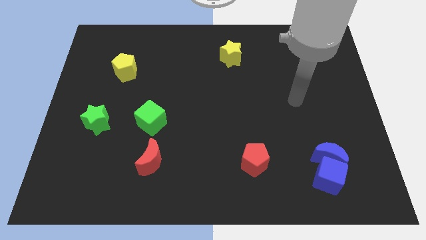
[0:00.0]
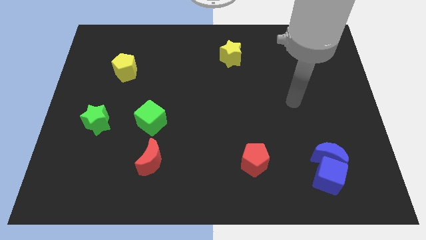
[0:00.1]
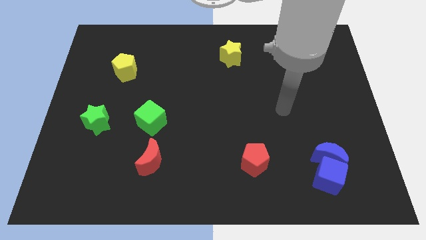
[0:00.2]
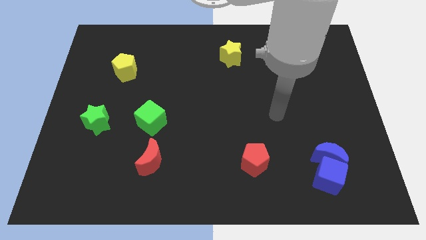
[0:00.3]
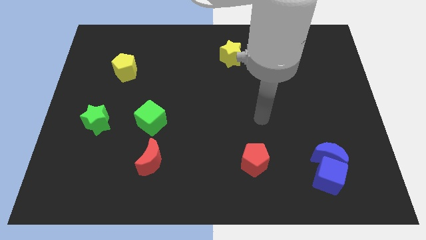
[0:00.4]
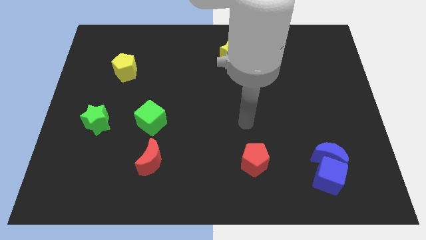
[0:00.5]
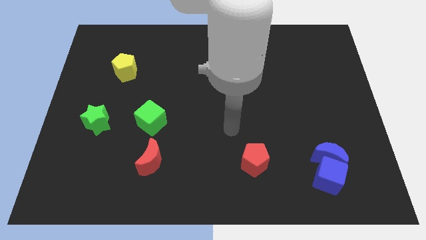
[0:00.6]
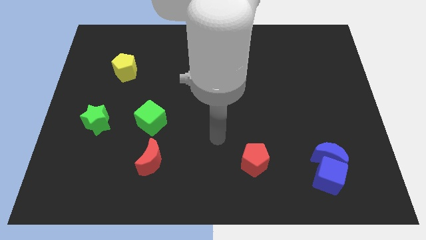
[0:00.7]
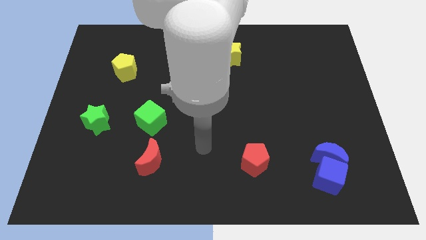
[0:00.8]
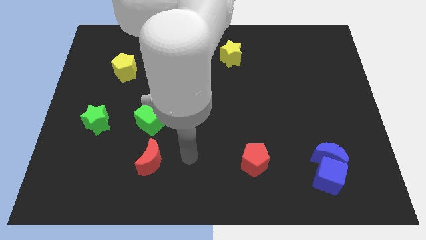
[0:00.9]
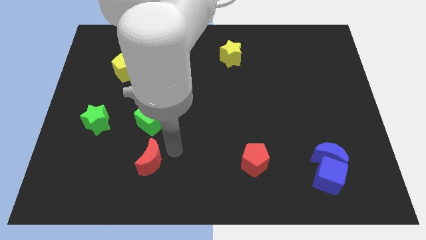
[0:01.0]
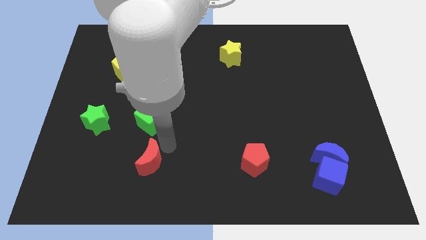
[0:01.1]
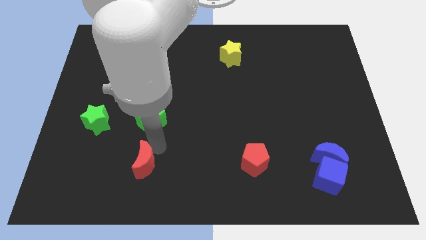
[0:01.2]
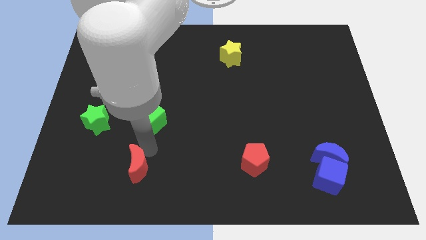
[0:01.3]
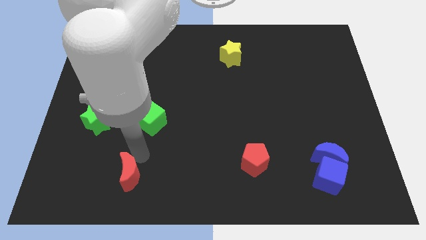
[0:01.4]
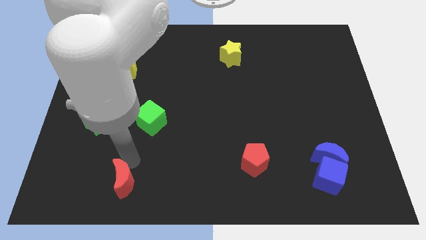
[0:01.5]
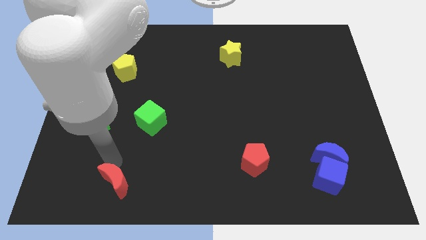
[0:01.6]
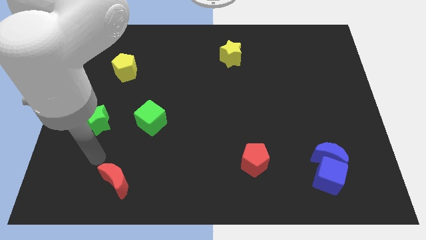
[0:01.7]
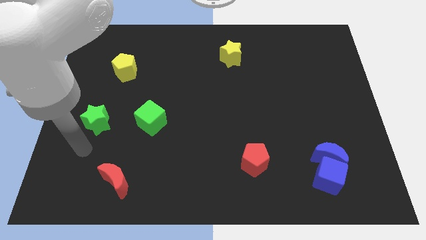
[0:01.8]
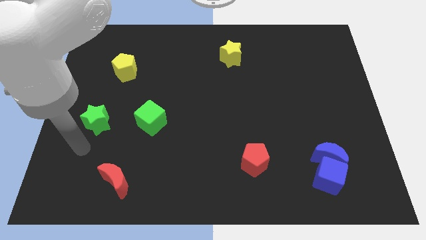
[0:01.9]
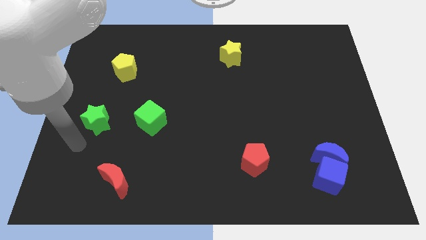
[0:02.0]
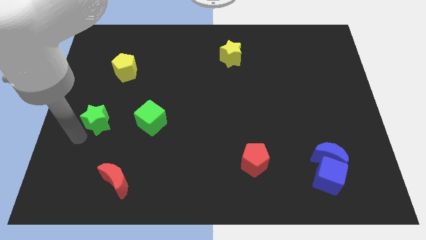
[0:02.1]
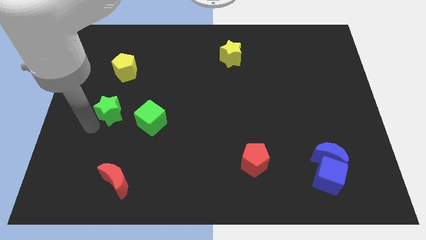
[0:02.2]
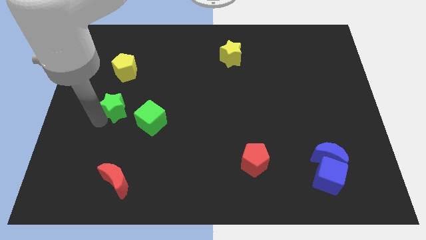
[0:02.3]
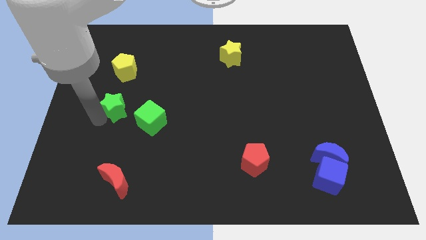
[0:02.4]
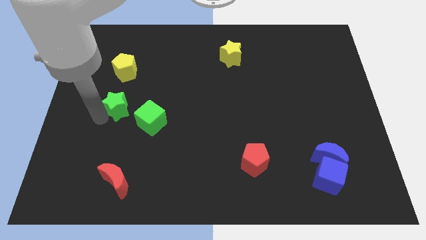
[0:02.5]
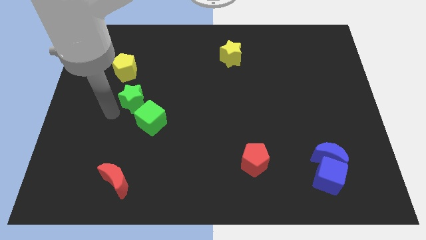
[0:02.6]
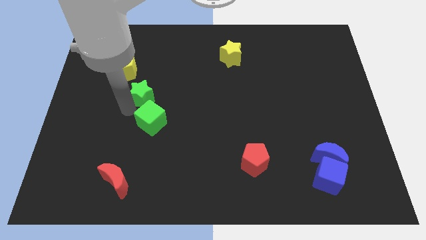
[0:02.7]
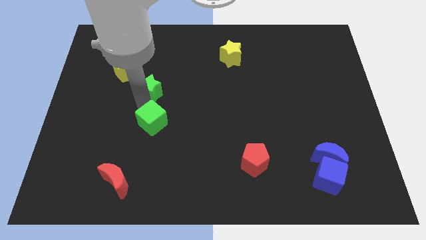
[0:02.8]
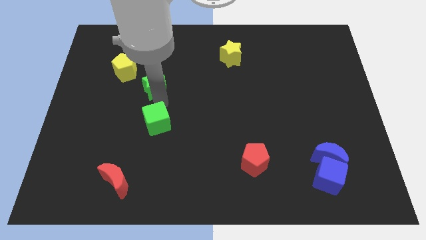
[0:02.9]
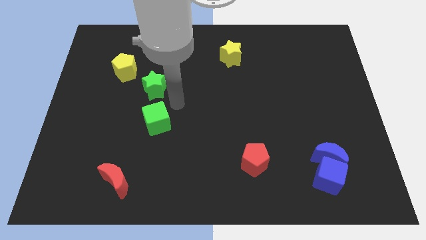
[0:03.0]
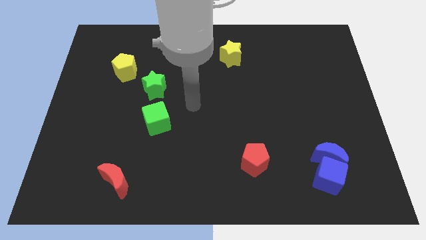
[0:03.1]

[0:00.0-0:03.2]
place the green star above the green cube

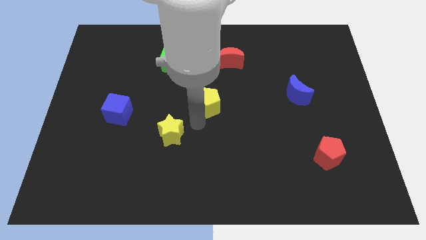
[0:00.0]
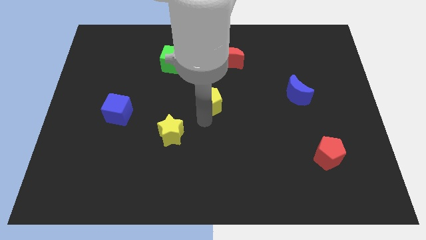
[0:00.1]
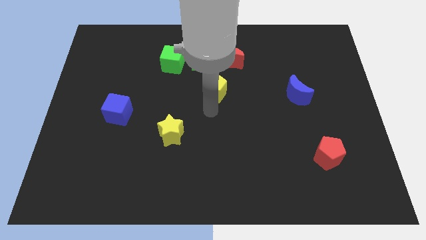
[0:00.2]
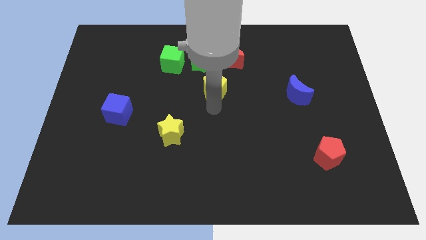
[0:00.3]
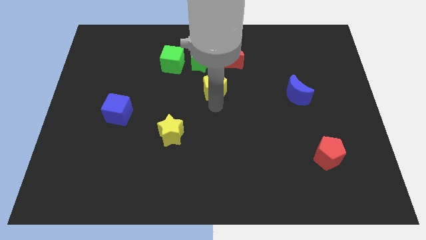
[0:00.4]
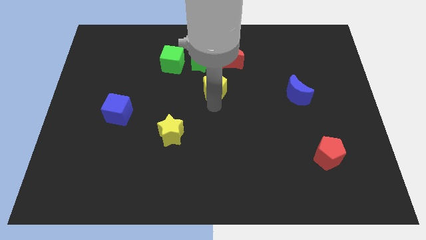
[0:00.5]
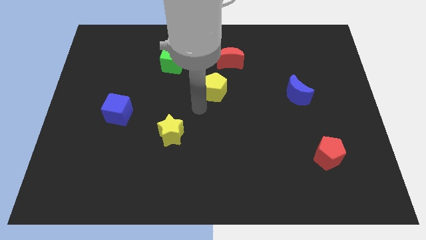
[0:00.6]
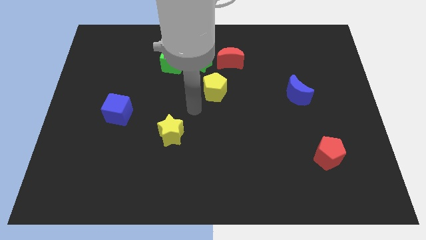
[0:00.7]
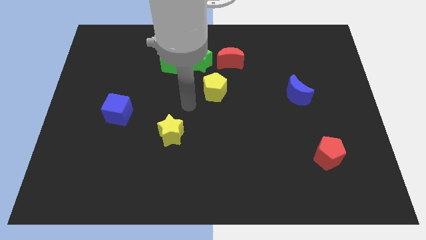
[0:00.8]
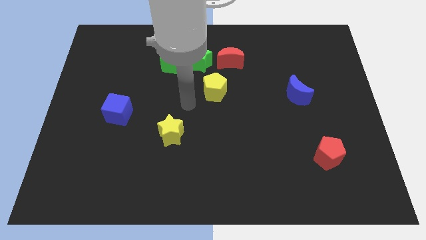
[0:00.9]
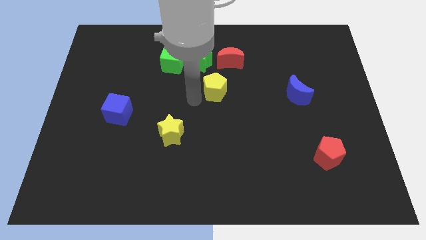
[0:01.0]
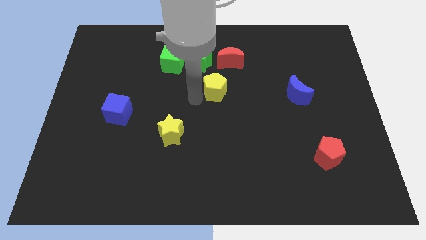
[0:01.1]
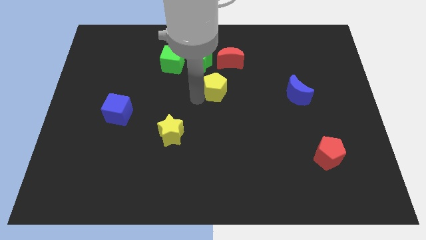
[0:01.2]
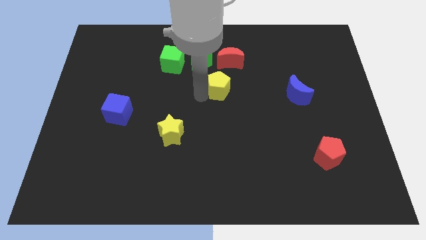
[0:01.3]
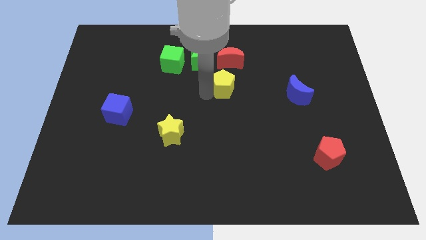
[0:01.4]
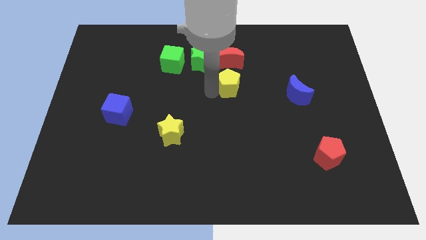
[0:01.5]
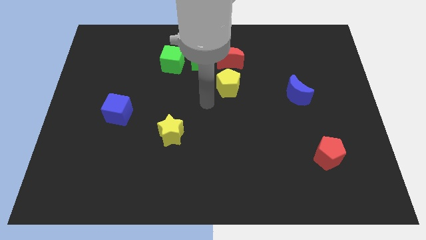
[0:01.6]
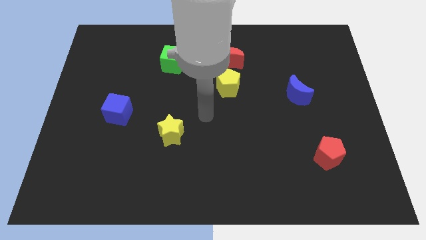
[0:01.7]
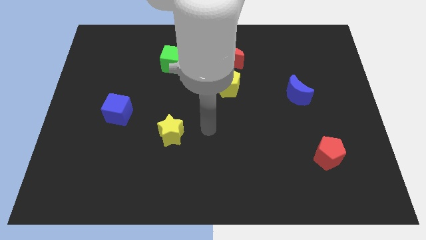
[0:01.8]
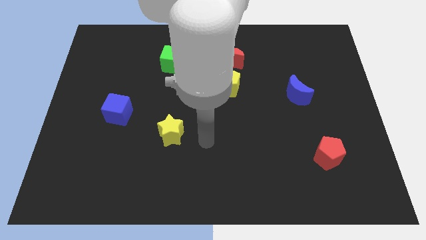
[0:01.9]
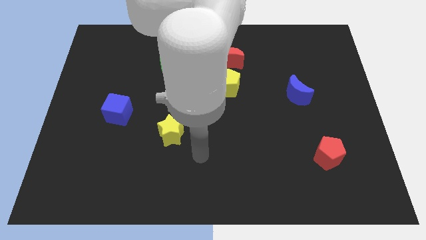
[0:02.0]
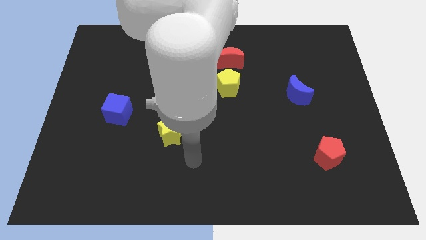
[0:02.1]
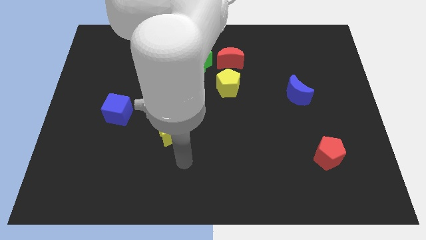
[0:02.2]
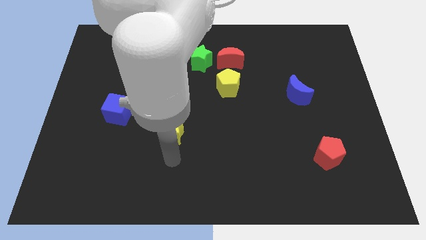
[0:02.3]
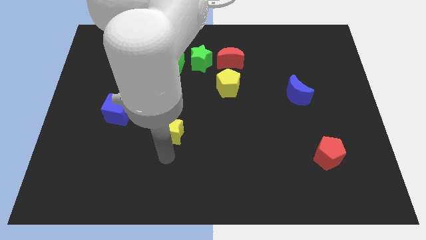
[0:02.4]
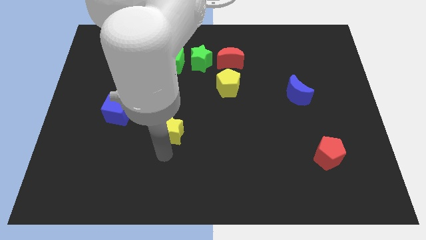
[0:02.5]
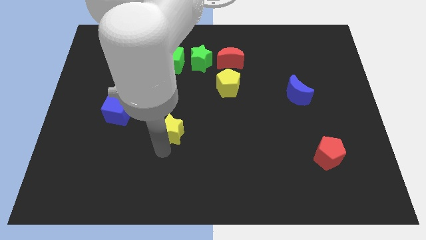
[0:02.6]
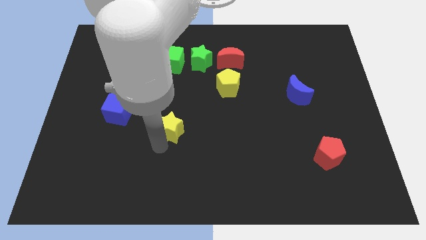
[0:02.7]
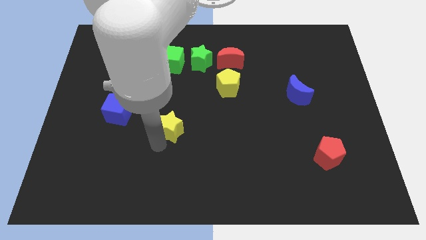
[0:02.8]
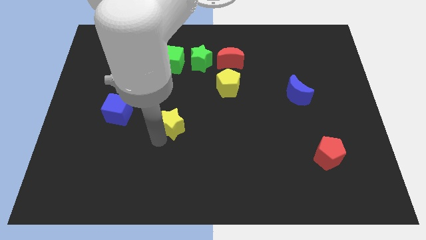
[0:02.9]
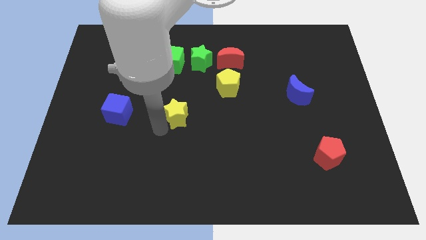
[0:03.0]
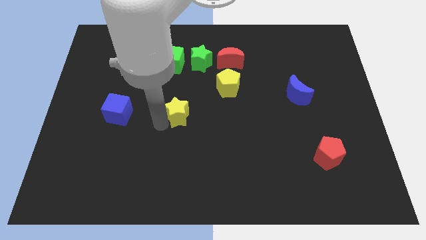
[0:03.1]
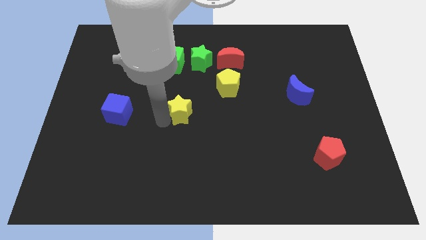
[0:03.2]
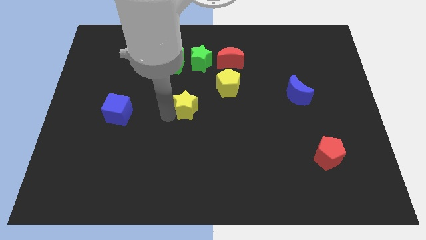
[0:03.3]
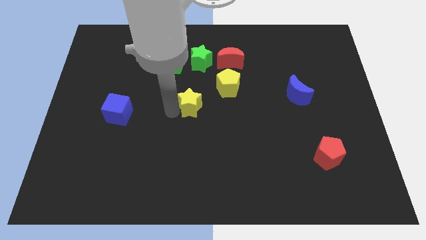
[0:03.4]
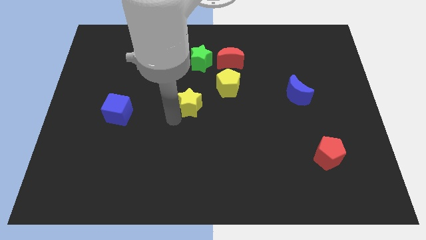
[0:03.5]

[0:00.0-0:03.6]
place yellow star below the green star

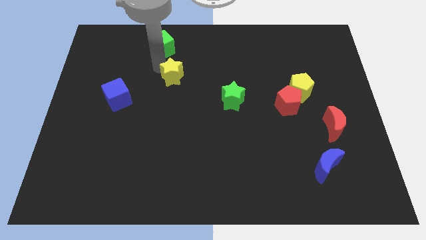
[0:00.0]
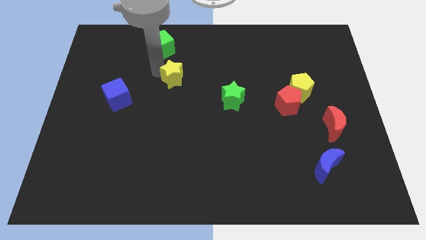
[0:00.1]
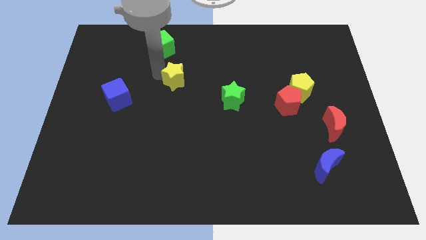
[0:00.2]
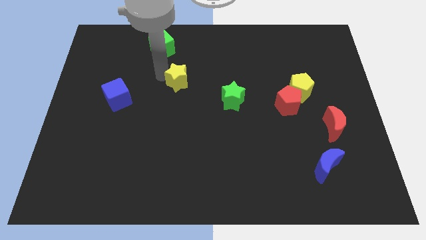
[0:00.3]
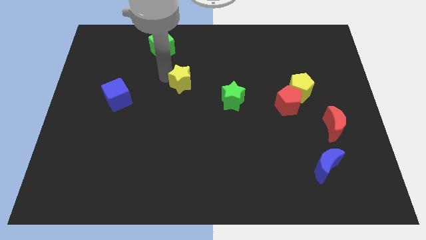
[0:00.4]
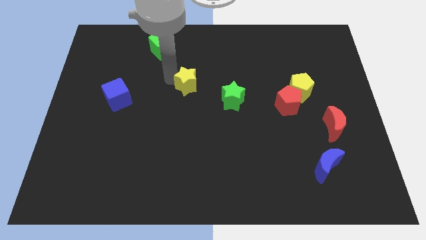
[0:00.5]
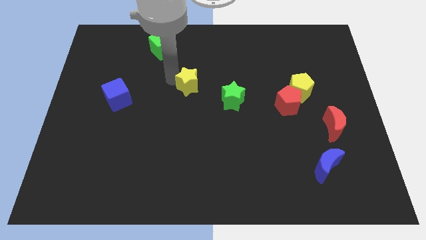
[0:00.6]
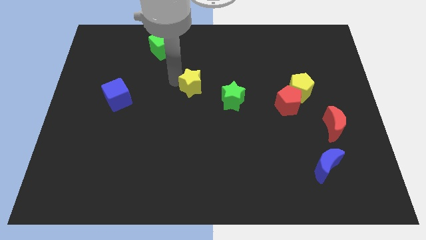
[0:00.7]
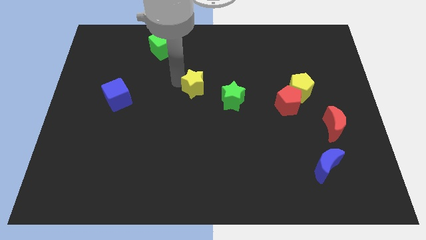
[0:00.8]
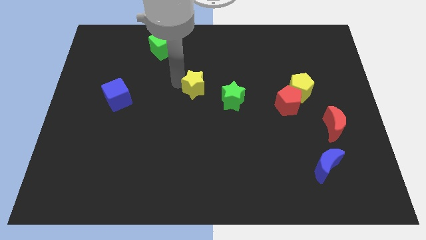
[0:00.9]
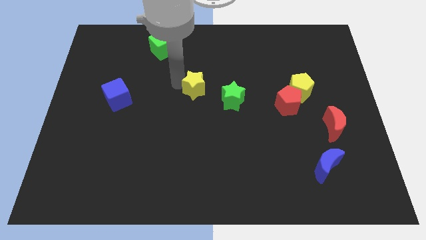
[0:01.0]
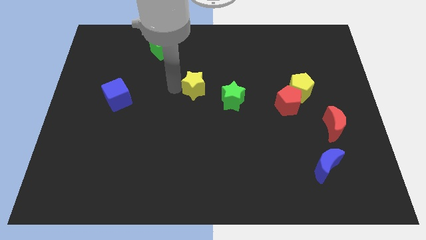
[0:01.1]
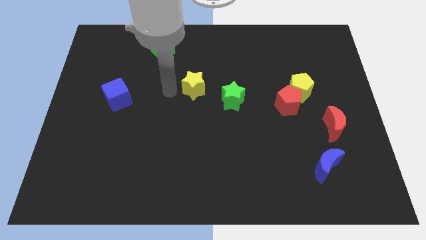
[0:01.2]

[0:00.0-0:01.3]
place the yellow star left to the green star

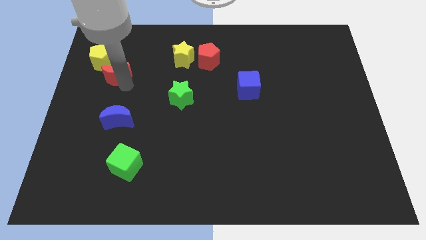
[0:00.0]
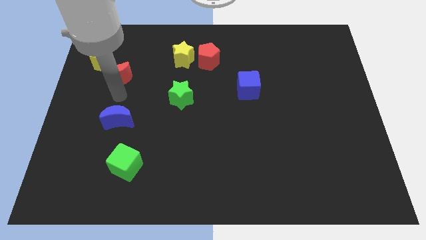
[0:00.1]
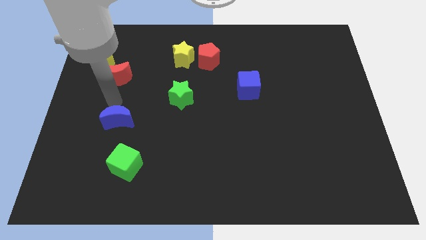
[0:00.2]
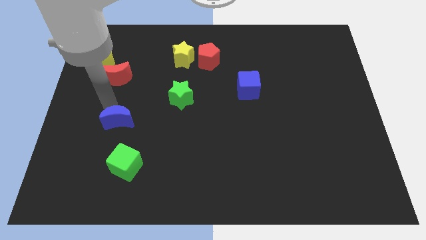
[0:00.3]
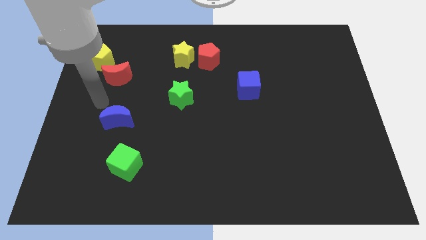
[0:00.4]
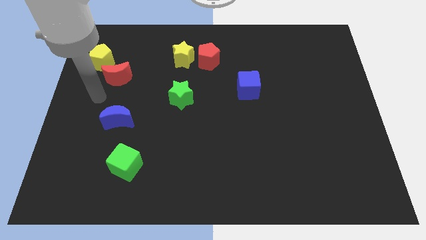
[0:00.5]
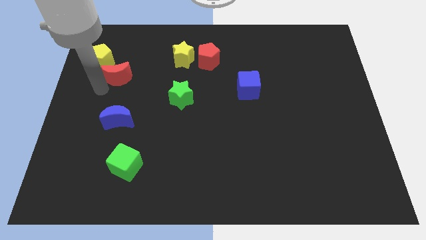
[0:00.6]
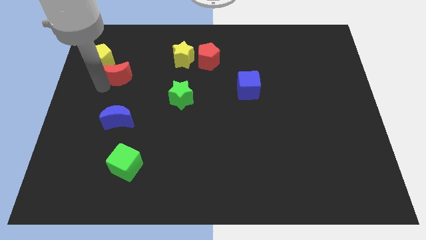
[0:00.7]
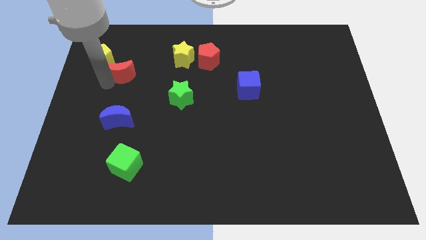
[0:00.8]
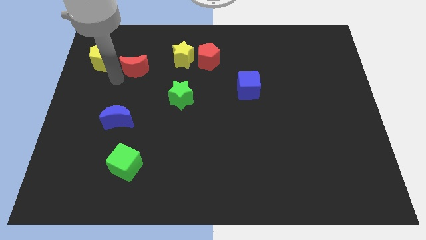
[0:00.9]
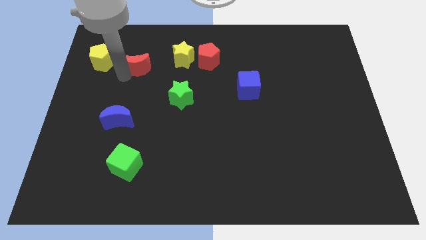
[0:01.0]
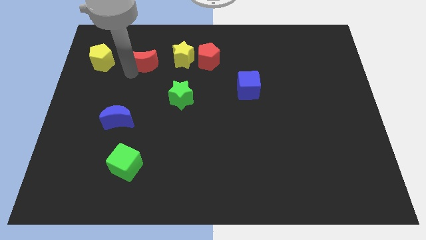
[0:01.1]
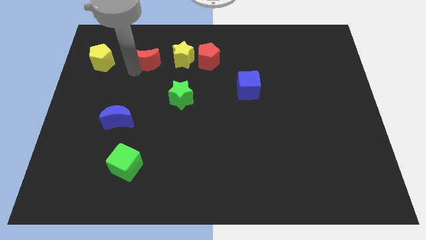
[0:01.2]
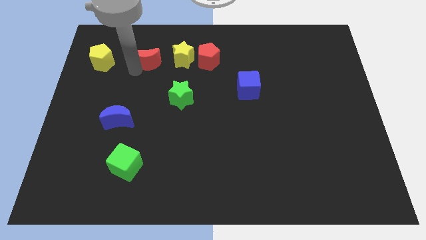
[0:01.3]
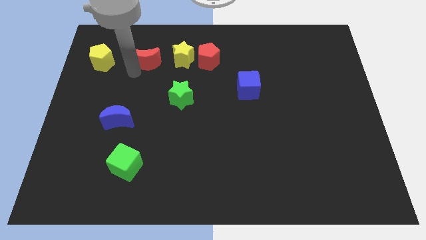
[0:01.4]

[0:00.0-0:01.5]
place the red moon in between the yellow blocks
